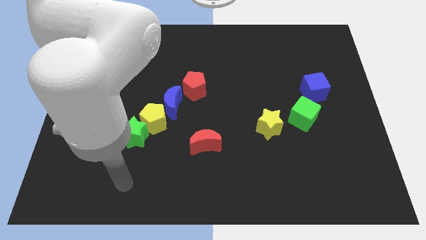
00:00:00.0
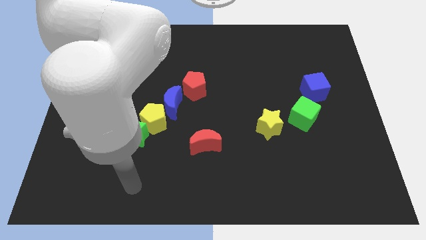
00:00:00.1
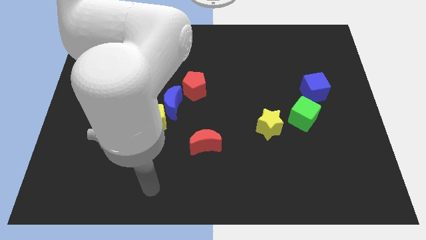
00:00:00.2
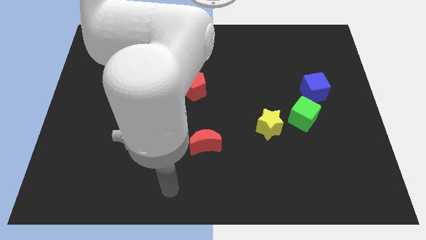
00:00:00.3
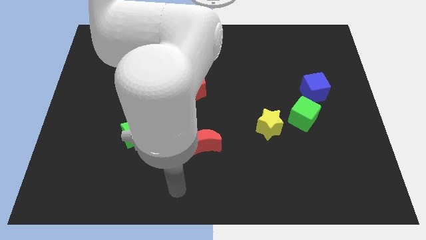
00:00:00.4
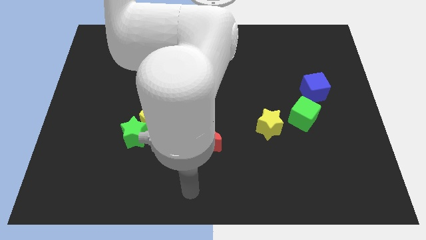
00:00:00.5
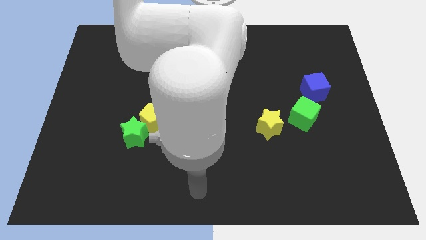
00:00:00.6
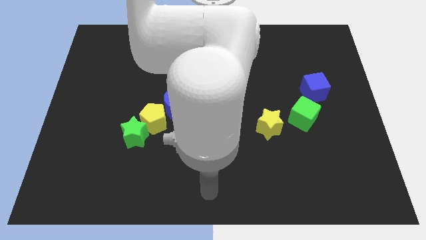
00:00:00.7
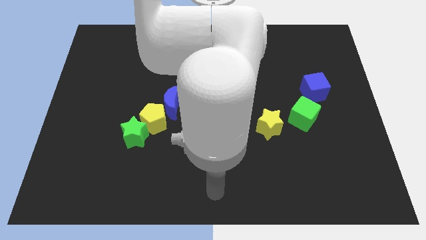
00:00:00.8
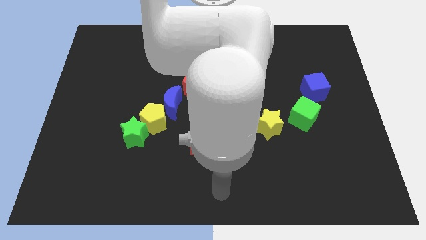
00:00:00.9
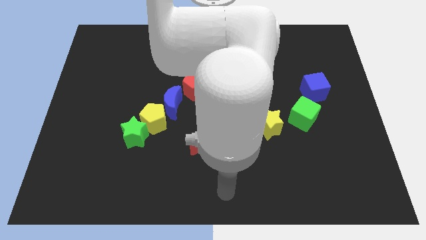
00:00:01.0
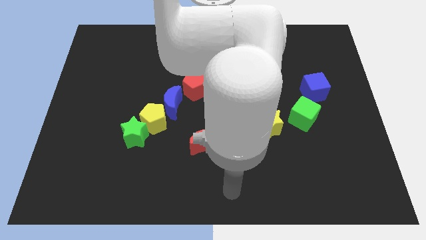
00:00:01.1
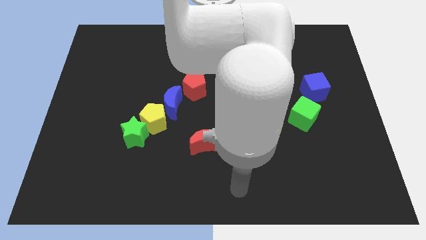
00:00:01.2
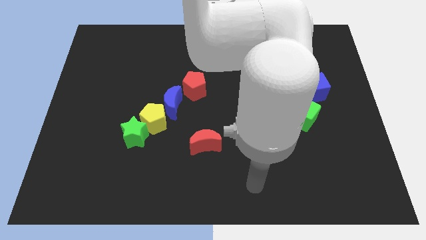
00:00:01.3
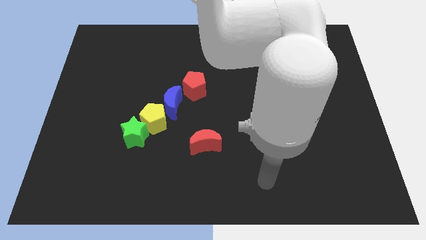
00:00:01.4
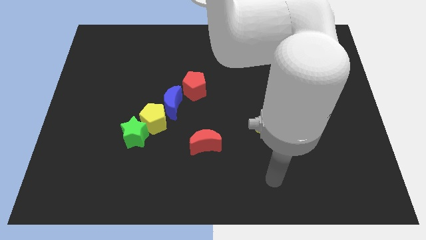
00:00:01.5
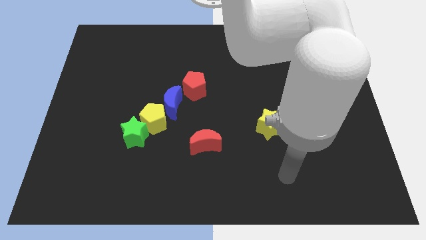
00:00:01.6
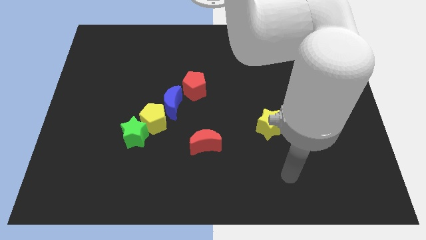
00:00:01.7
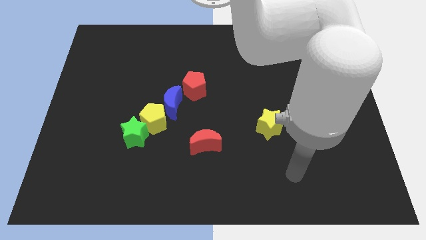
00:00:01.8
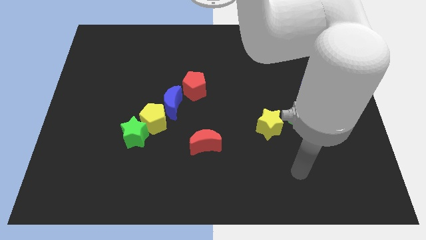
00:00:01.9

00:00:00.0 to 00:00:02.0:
move your hand towards right side of the board

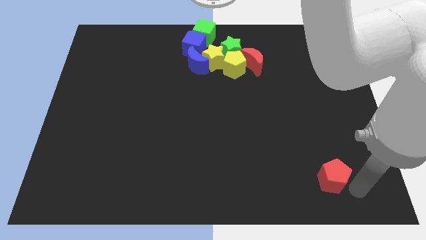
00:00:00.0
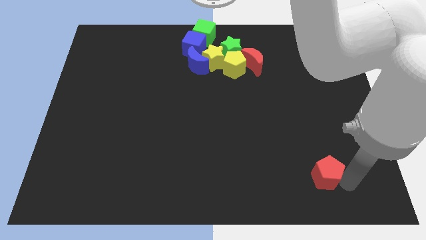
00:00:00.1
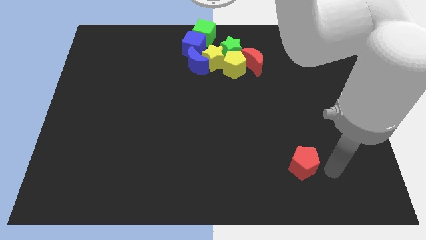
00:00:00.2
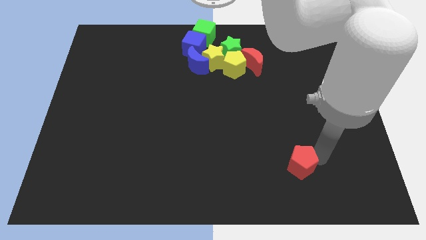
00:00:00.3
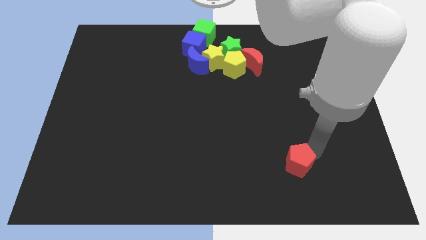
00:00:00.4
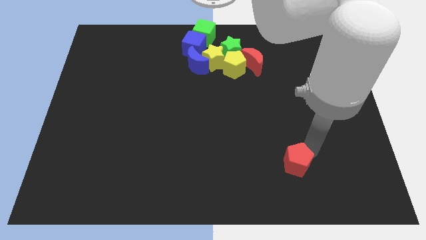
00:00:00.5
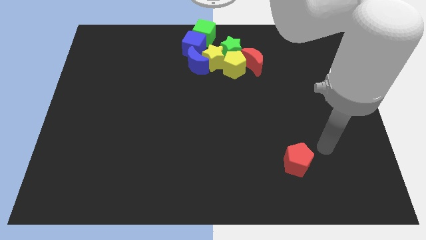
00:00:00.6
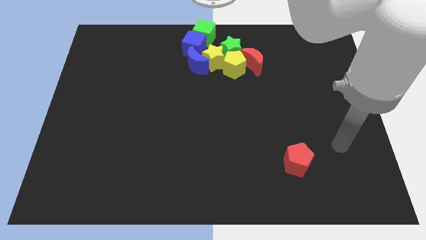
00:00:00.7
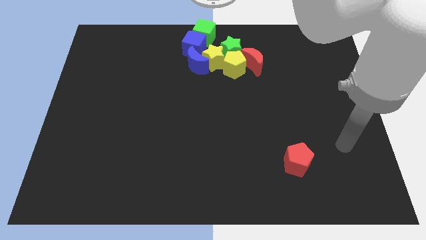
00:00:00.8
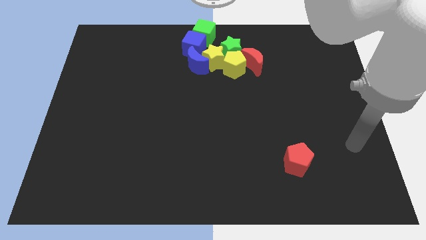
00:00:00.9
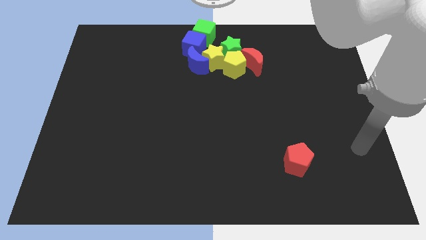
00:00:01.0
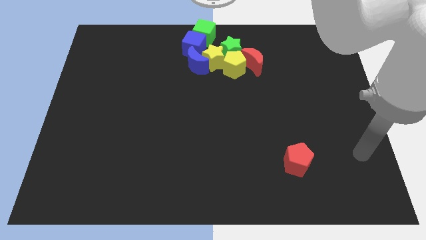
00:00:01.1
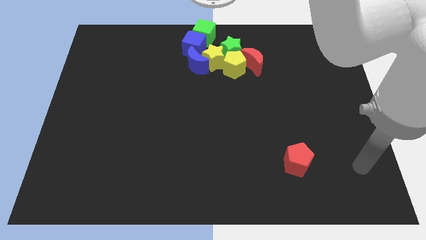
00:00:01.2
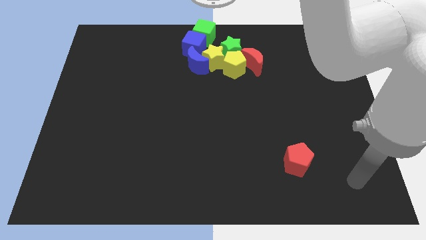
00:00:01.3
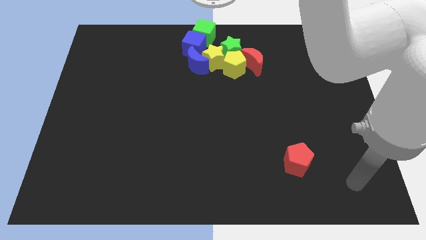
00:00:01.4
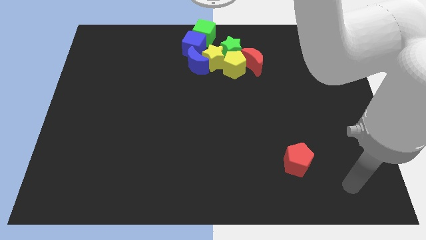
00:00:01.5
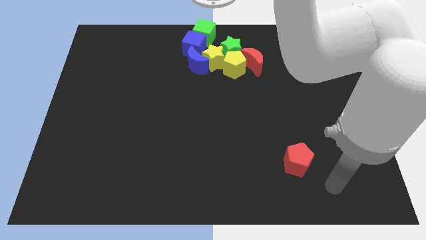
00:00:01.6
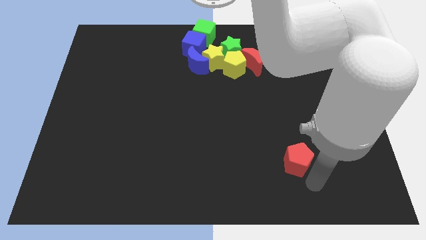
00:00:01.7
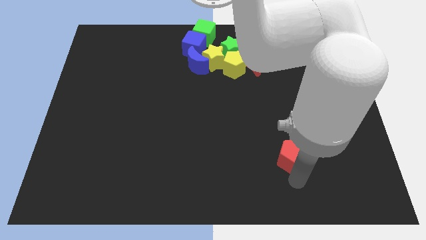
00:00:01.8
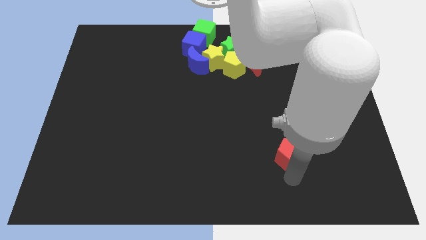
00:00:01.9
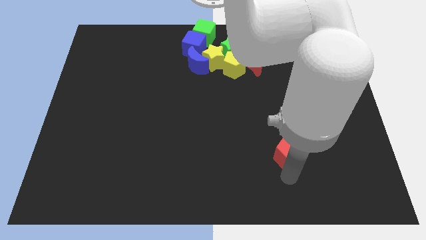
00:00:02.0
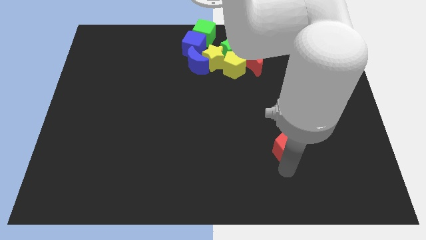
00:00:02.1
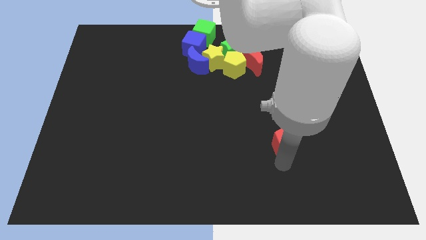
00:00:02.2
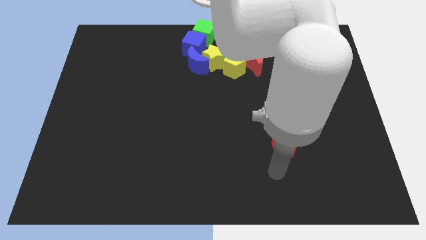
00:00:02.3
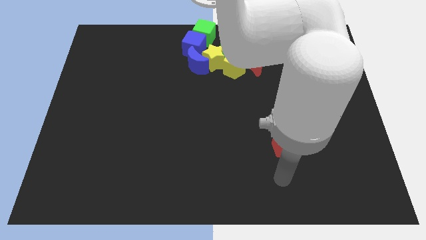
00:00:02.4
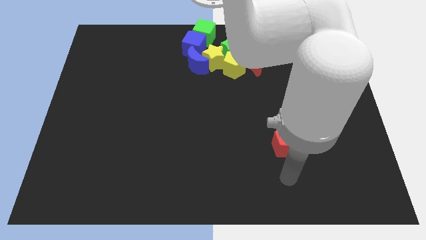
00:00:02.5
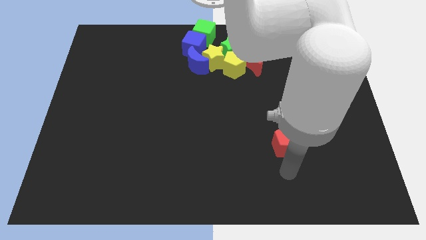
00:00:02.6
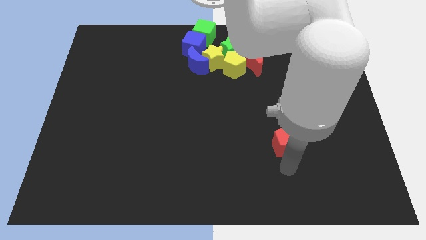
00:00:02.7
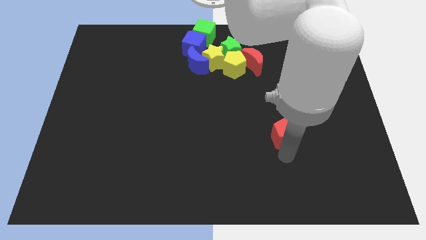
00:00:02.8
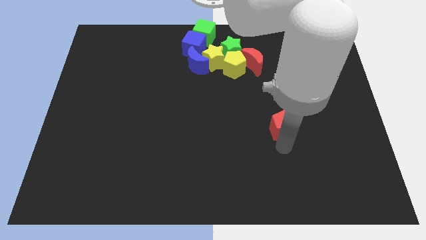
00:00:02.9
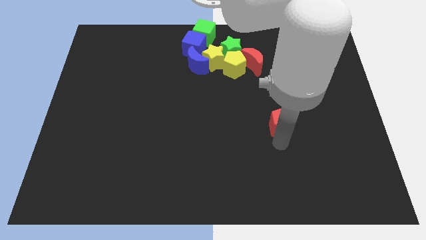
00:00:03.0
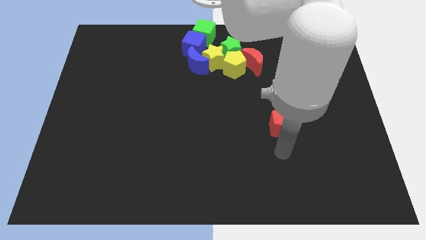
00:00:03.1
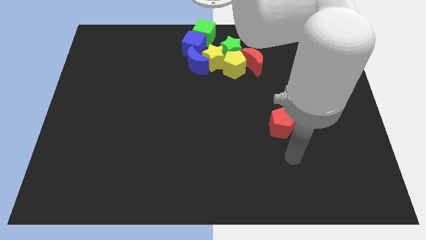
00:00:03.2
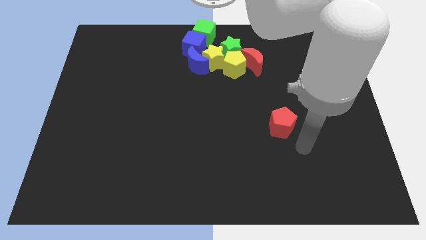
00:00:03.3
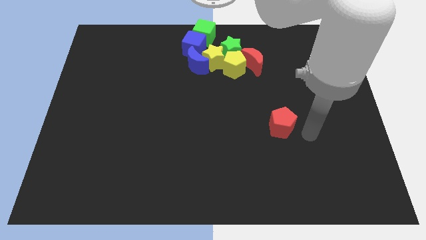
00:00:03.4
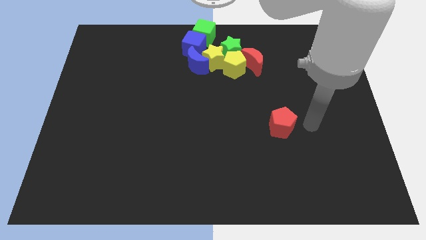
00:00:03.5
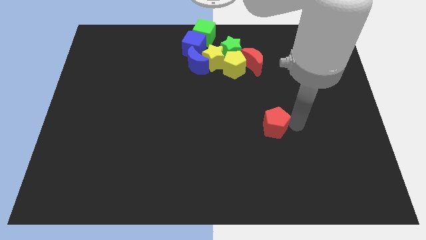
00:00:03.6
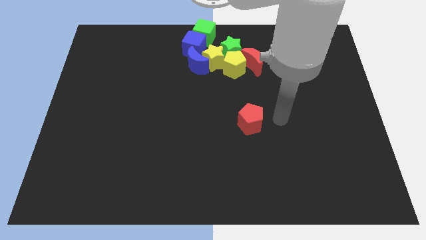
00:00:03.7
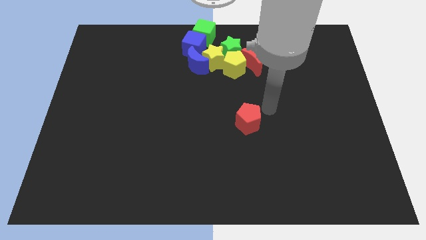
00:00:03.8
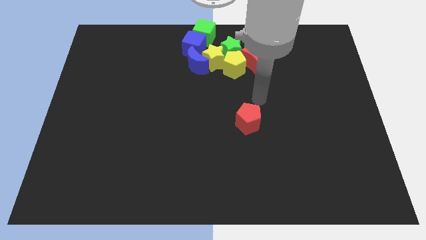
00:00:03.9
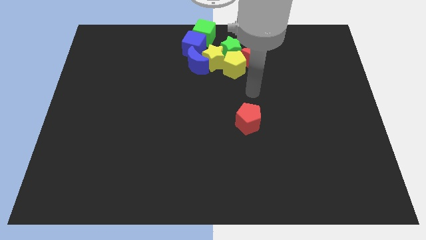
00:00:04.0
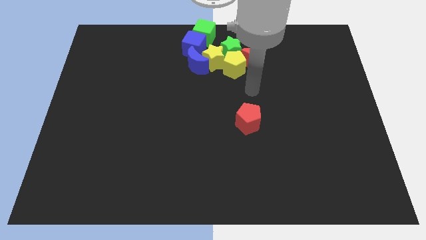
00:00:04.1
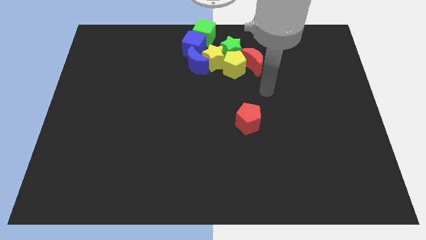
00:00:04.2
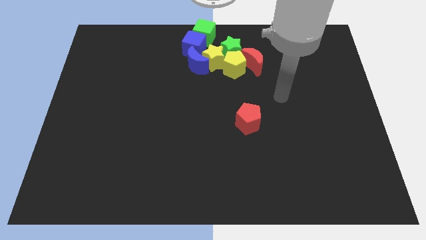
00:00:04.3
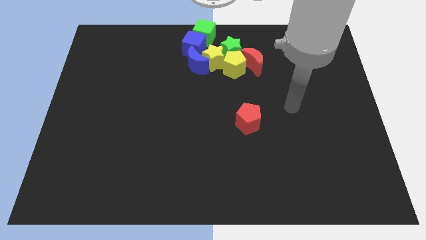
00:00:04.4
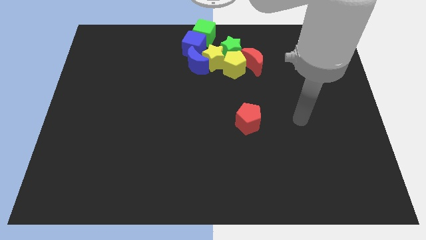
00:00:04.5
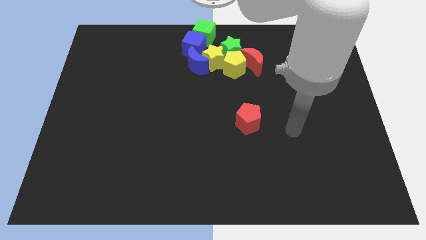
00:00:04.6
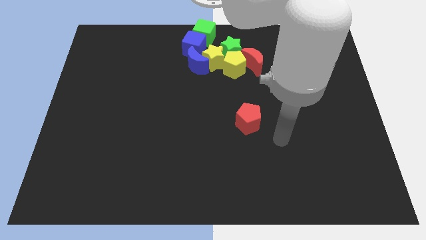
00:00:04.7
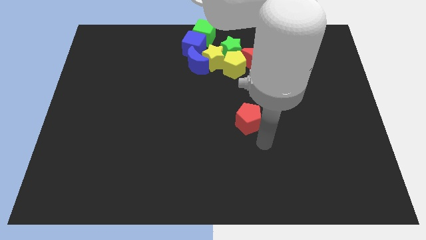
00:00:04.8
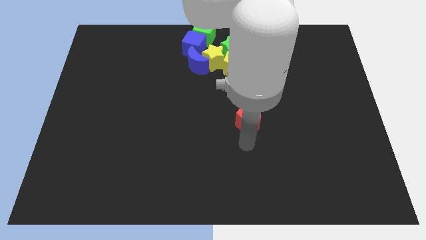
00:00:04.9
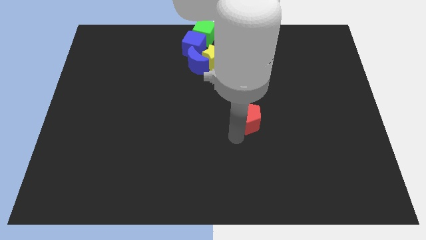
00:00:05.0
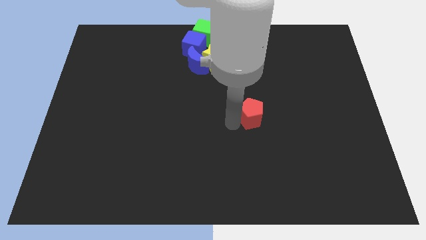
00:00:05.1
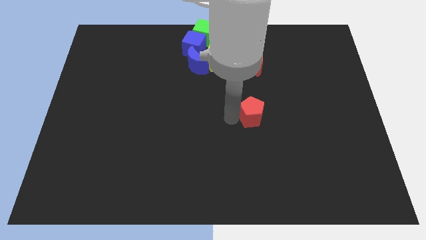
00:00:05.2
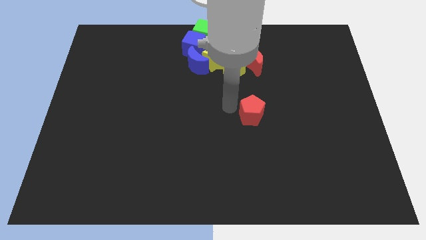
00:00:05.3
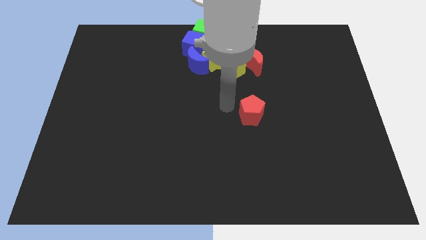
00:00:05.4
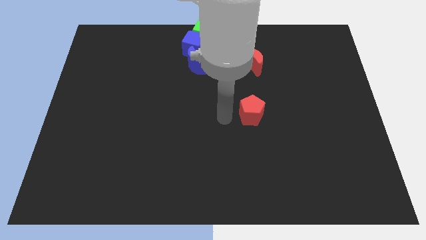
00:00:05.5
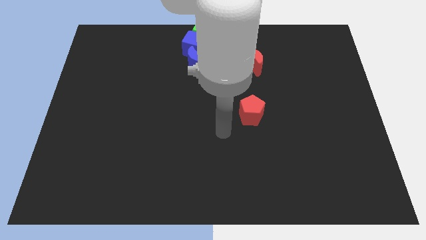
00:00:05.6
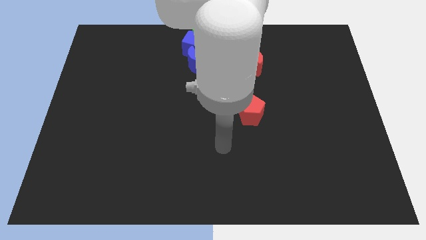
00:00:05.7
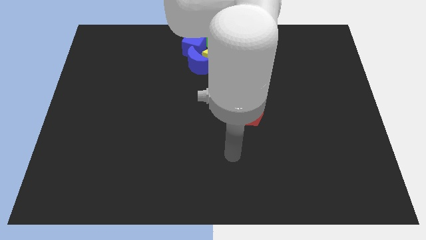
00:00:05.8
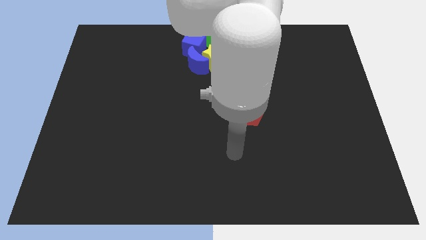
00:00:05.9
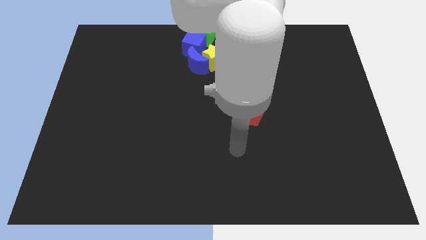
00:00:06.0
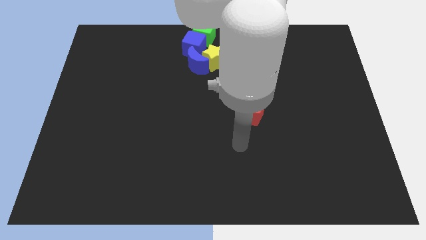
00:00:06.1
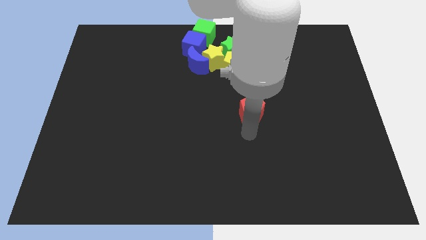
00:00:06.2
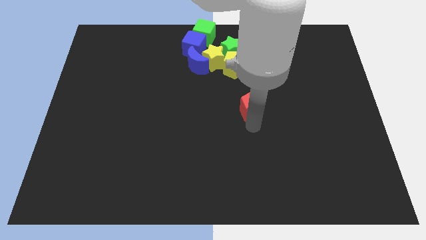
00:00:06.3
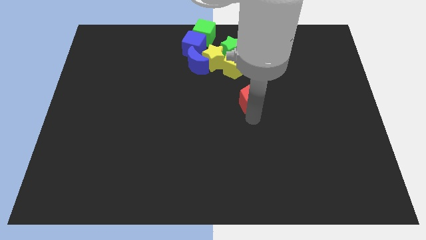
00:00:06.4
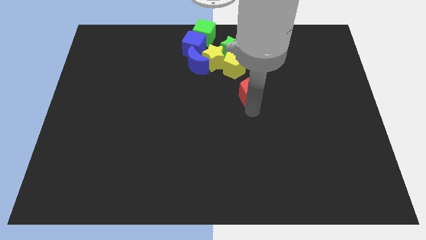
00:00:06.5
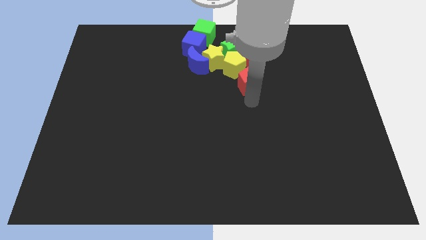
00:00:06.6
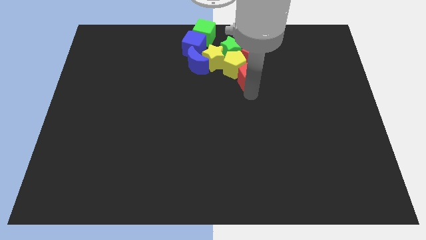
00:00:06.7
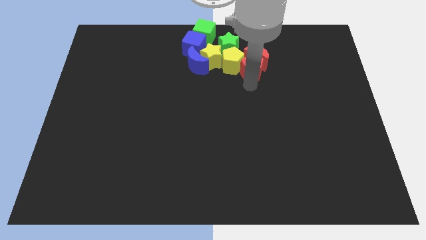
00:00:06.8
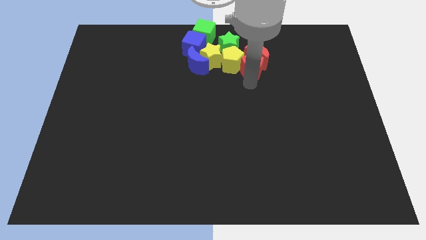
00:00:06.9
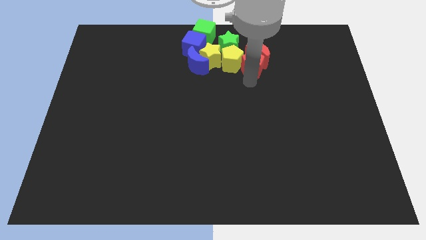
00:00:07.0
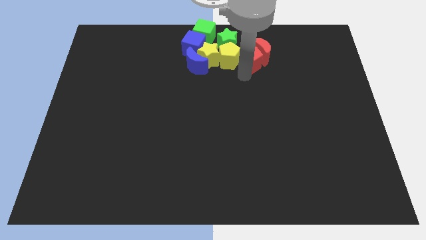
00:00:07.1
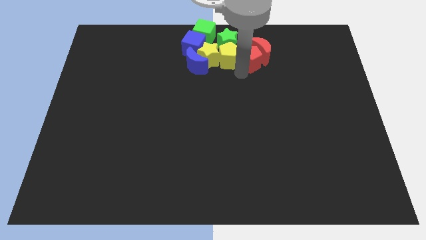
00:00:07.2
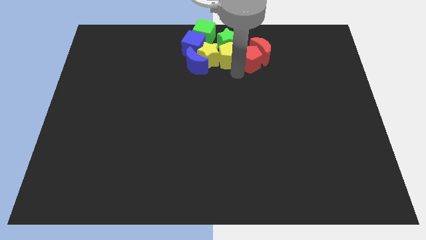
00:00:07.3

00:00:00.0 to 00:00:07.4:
push the red pentagon into the group of blocks on the top center
